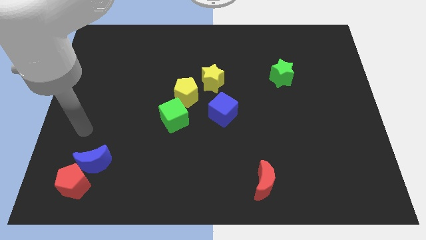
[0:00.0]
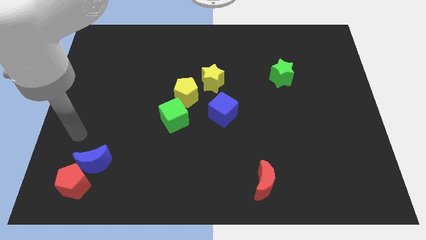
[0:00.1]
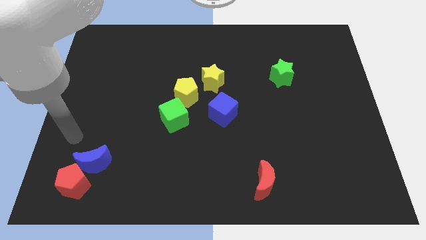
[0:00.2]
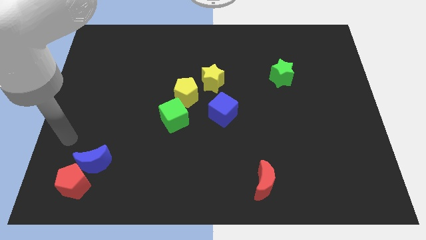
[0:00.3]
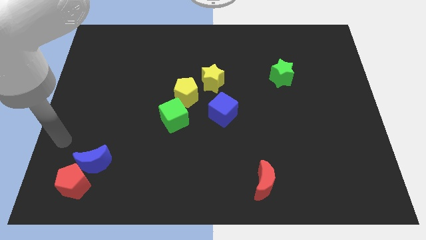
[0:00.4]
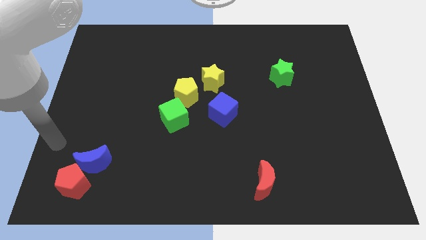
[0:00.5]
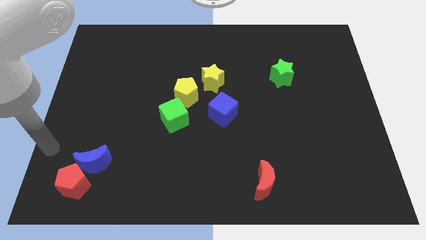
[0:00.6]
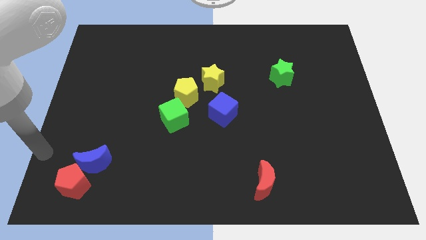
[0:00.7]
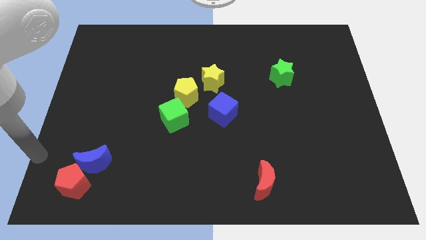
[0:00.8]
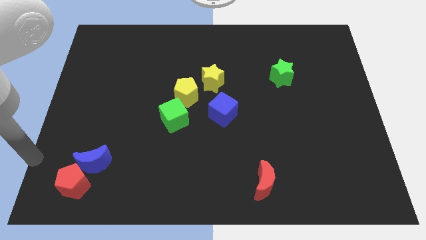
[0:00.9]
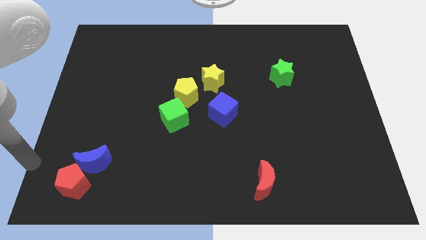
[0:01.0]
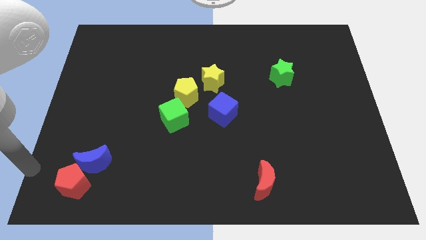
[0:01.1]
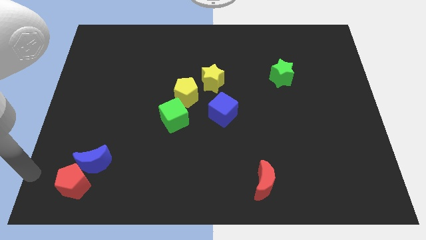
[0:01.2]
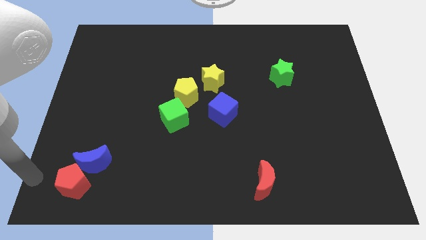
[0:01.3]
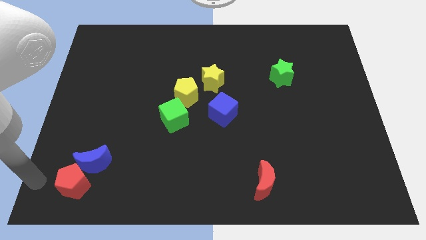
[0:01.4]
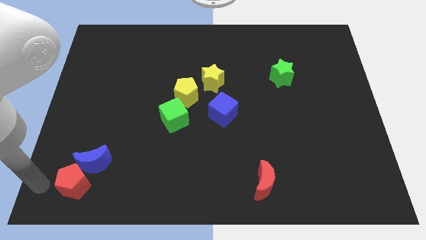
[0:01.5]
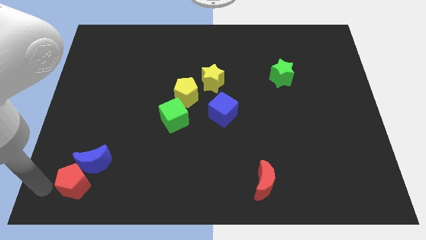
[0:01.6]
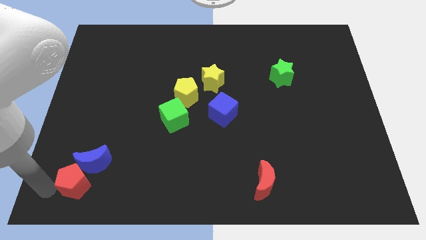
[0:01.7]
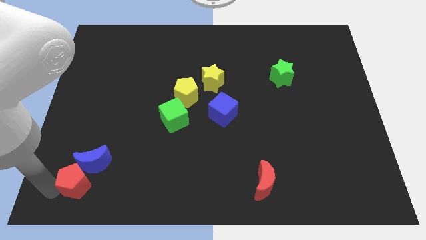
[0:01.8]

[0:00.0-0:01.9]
move the arm towards the red pentagon

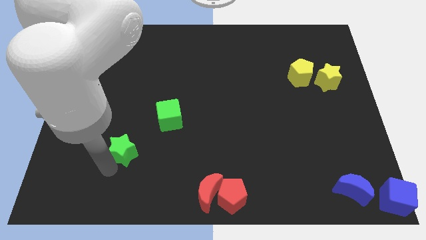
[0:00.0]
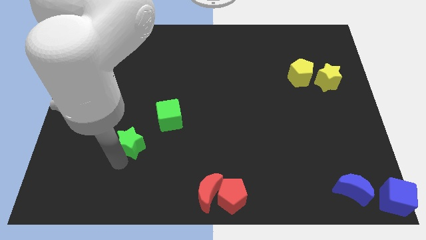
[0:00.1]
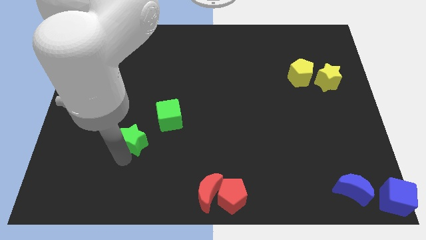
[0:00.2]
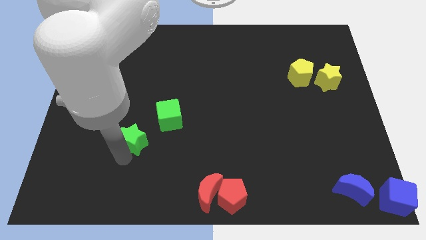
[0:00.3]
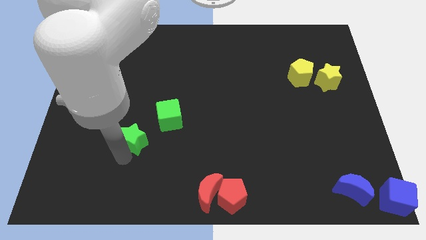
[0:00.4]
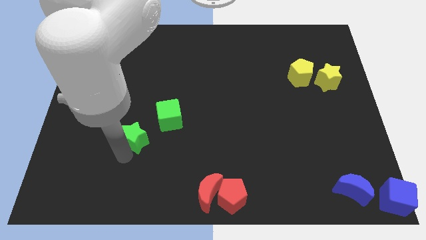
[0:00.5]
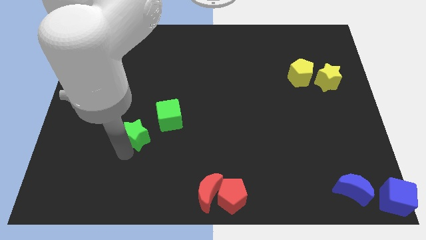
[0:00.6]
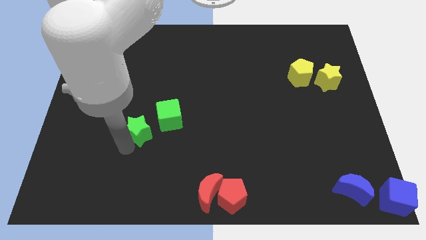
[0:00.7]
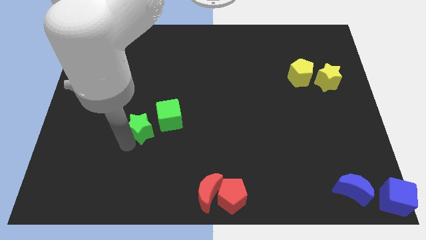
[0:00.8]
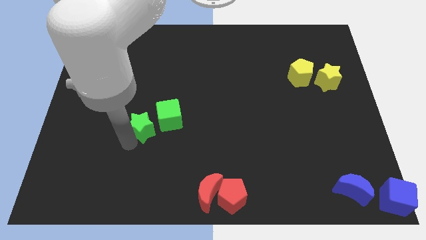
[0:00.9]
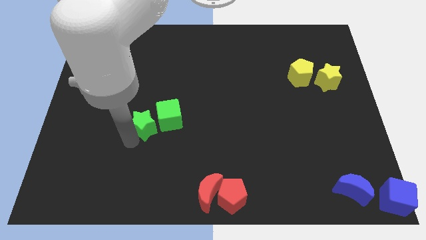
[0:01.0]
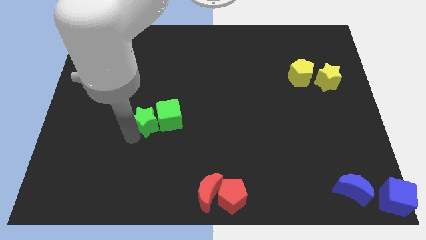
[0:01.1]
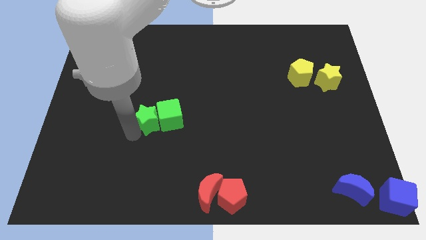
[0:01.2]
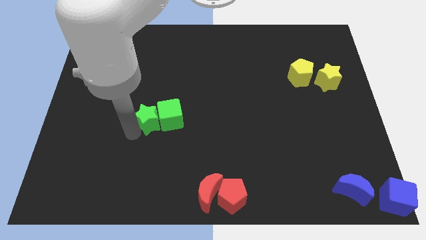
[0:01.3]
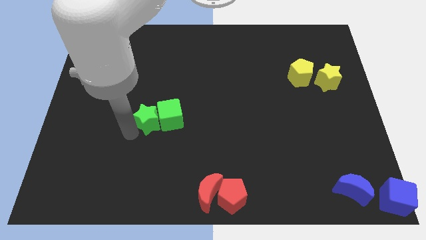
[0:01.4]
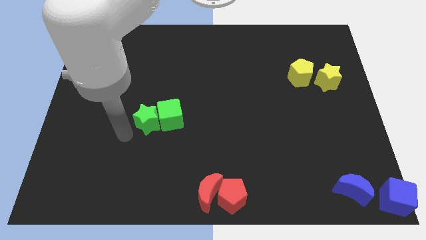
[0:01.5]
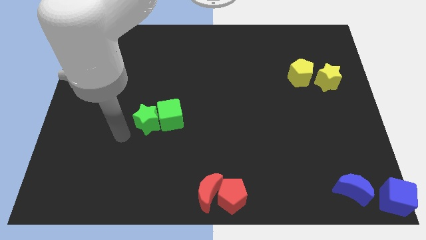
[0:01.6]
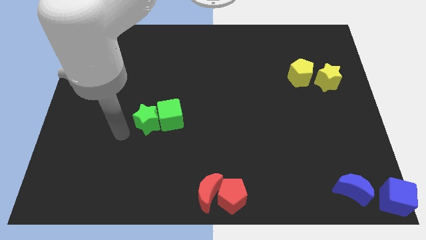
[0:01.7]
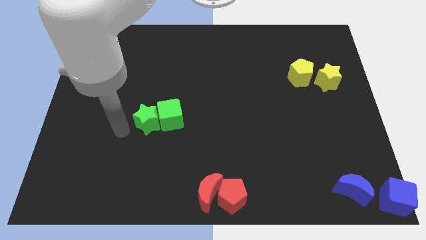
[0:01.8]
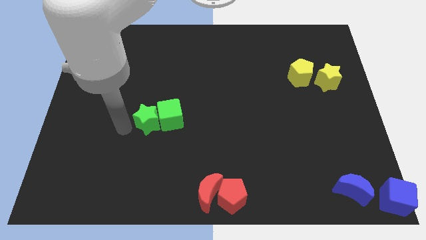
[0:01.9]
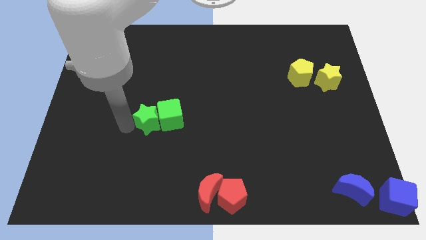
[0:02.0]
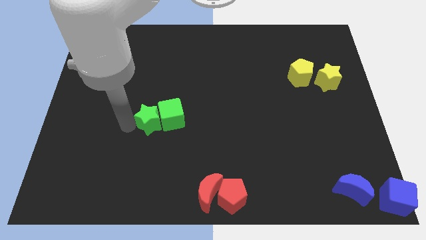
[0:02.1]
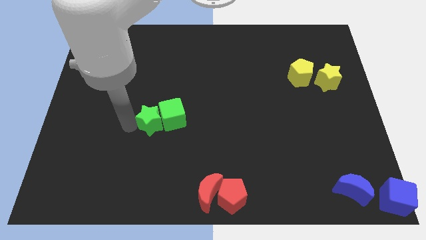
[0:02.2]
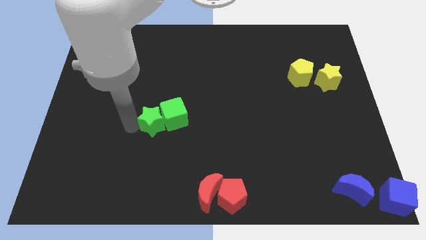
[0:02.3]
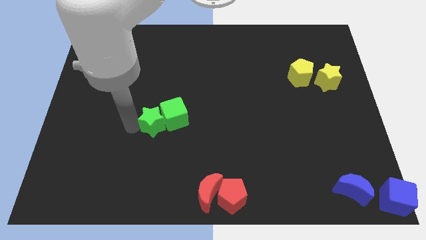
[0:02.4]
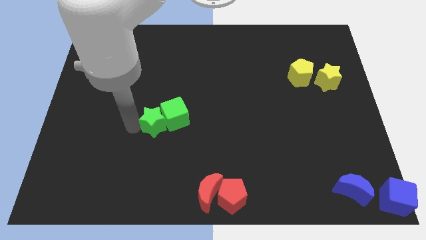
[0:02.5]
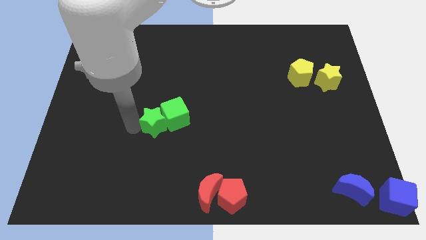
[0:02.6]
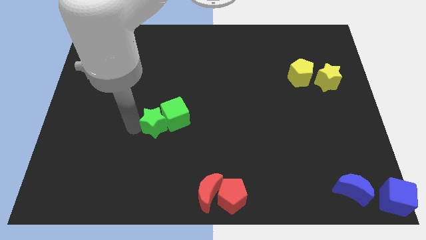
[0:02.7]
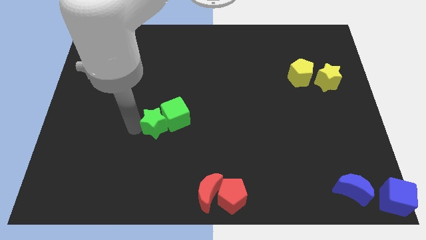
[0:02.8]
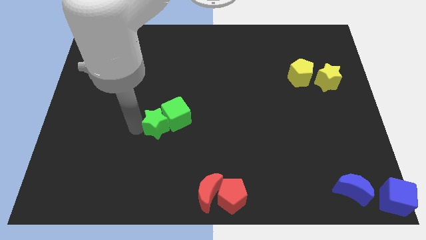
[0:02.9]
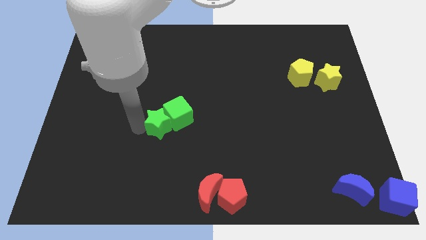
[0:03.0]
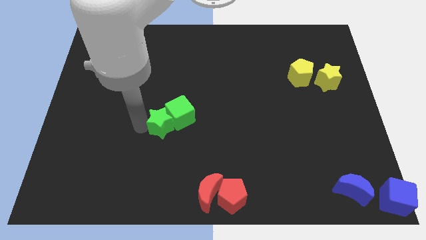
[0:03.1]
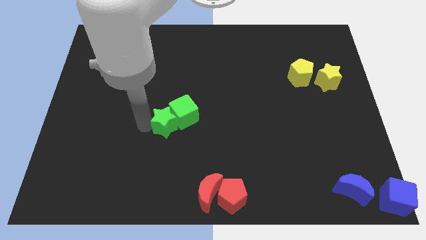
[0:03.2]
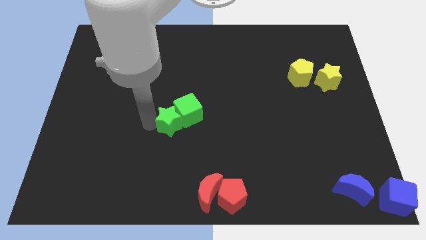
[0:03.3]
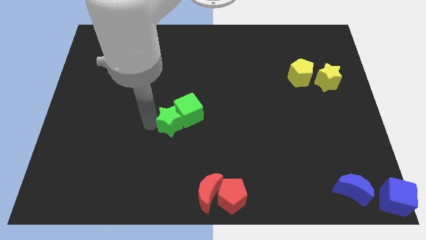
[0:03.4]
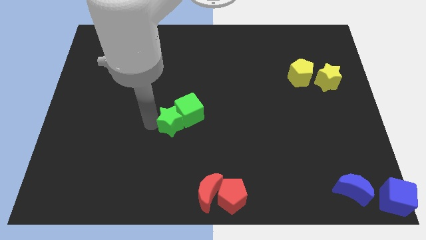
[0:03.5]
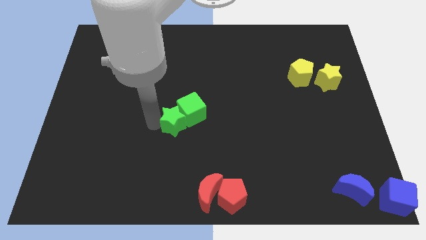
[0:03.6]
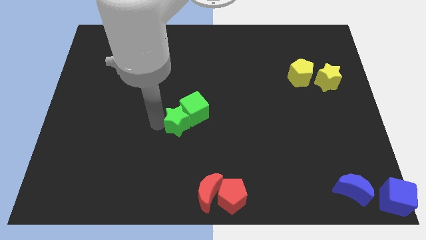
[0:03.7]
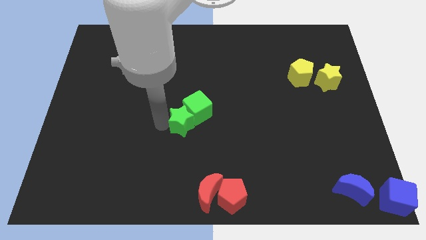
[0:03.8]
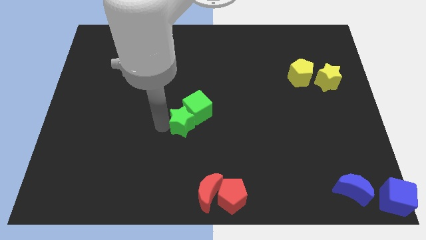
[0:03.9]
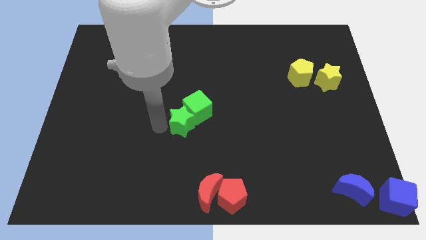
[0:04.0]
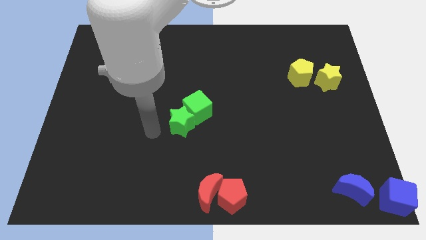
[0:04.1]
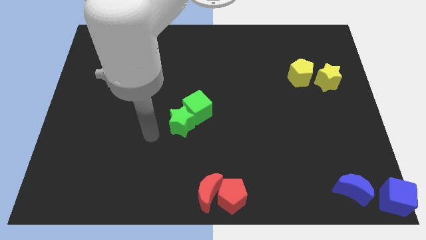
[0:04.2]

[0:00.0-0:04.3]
move green star along with green cube to the centre of the board

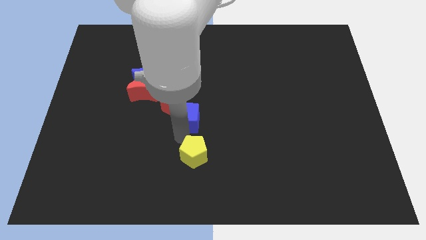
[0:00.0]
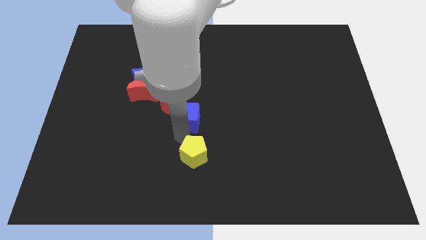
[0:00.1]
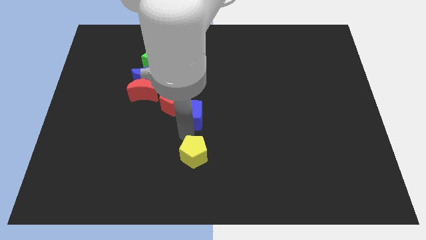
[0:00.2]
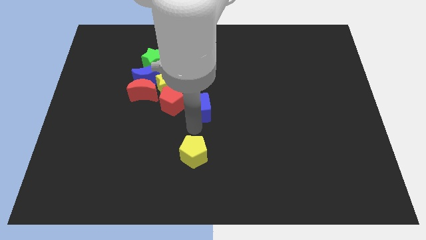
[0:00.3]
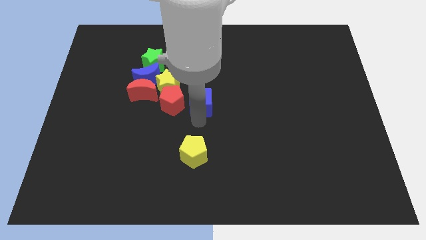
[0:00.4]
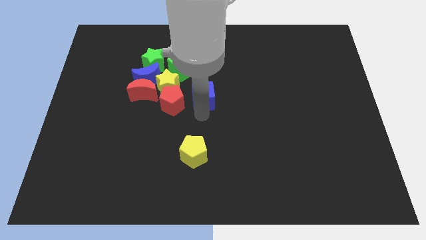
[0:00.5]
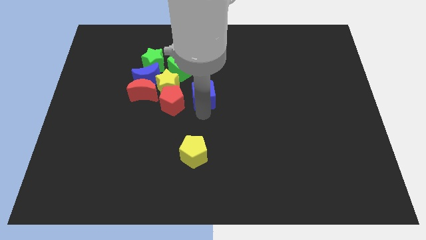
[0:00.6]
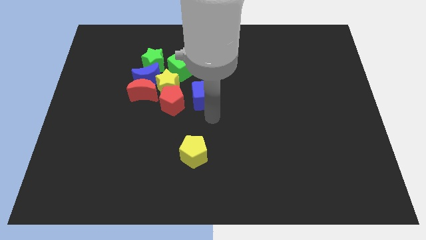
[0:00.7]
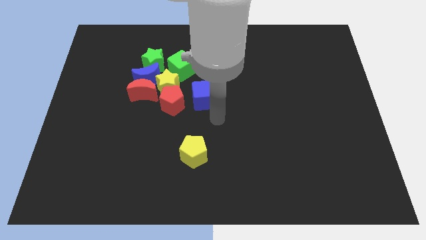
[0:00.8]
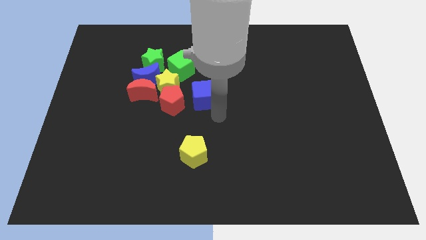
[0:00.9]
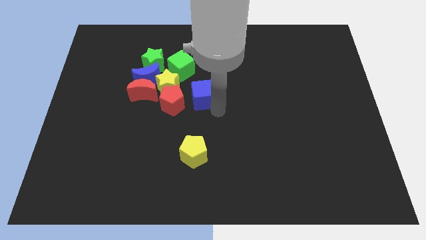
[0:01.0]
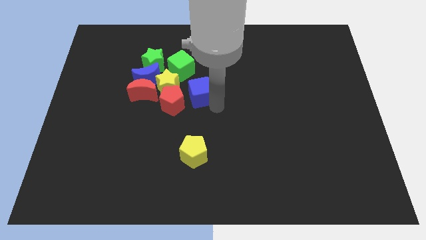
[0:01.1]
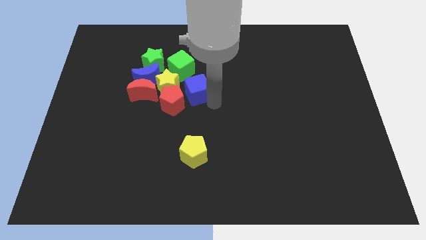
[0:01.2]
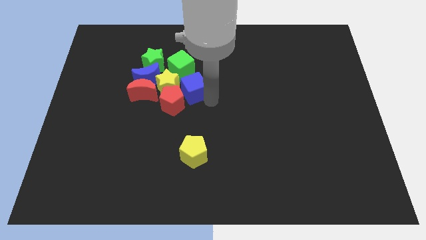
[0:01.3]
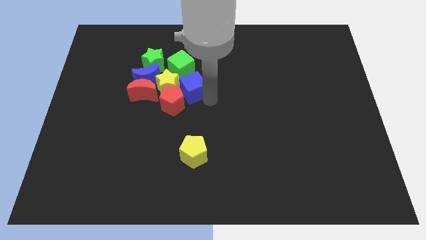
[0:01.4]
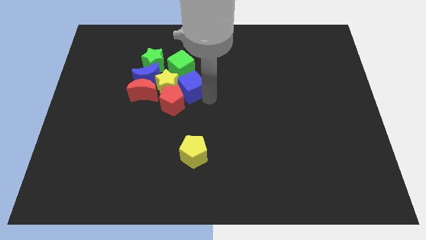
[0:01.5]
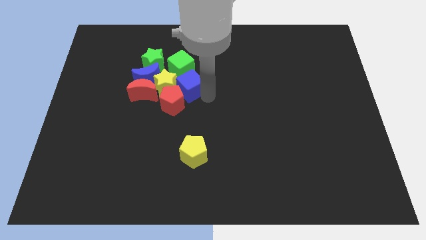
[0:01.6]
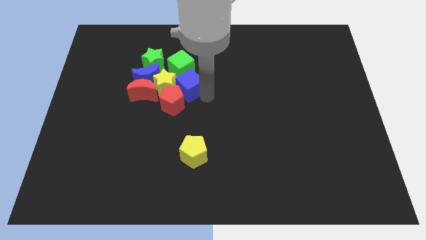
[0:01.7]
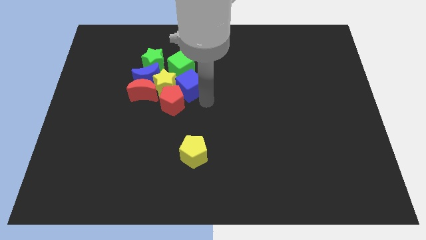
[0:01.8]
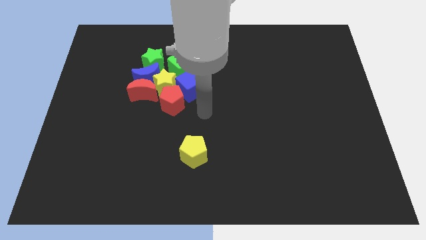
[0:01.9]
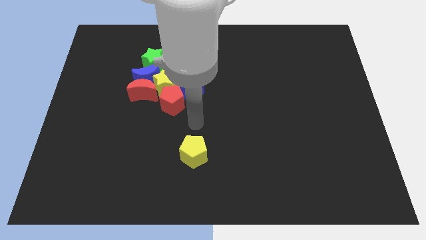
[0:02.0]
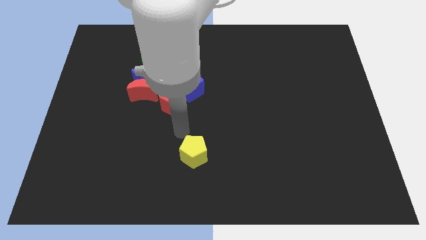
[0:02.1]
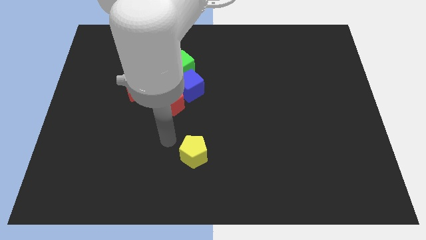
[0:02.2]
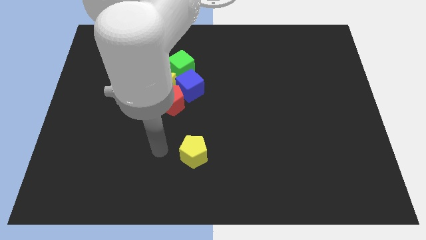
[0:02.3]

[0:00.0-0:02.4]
drag the blue cube close to the group of blocks

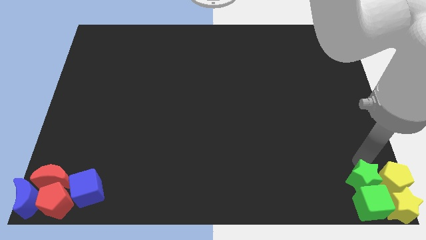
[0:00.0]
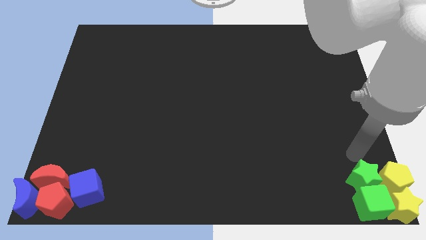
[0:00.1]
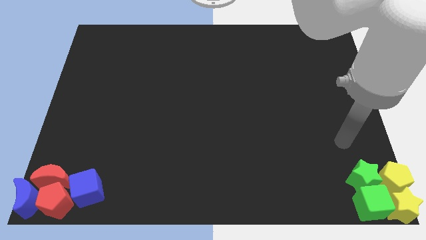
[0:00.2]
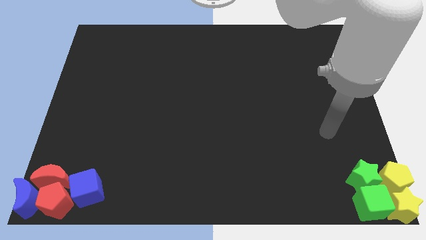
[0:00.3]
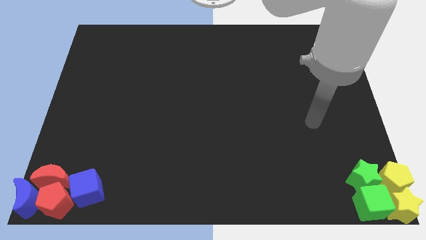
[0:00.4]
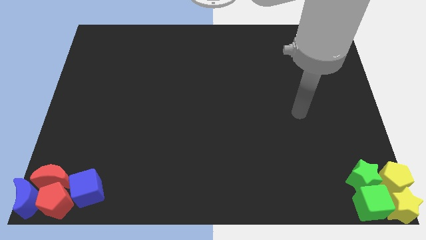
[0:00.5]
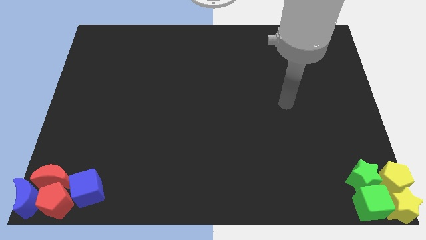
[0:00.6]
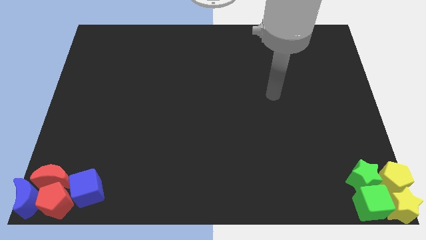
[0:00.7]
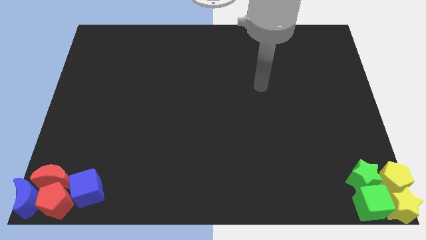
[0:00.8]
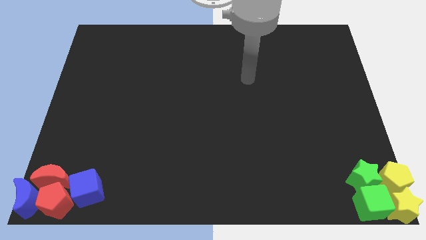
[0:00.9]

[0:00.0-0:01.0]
move the arm diagonally up
